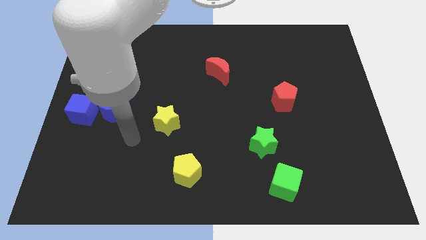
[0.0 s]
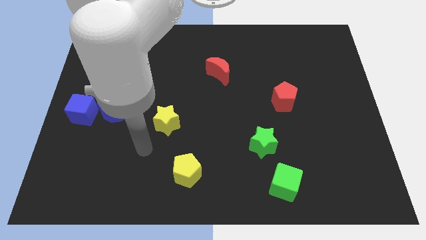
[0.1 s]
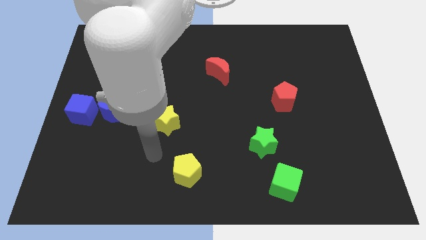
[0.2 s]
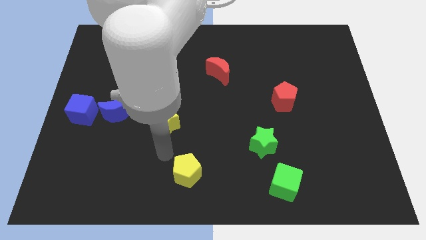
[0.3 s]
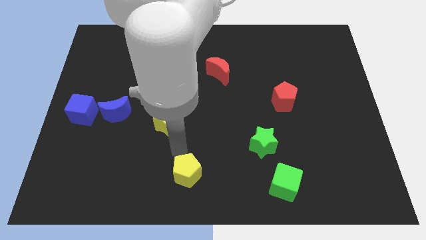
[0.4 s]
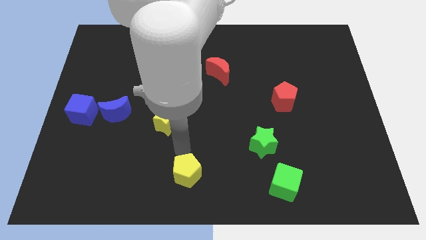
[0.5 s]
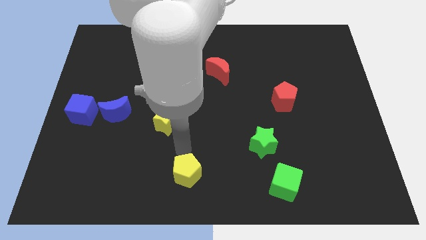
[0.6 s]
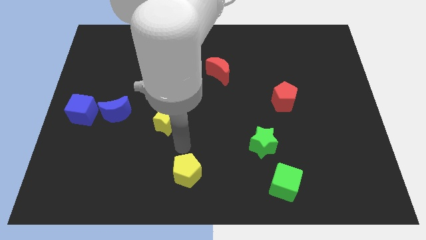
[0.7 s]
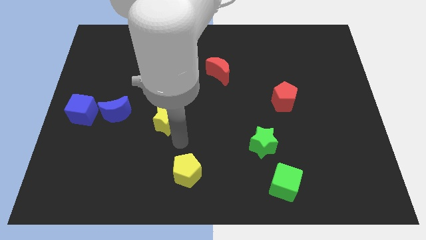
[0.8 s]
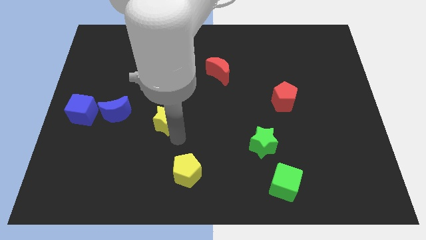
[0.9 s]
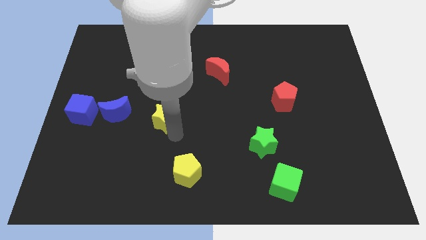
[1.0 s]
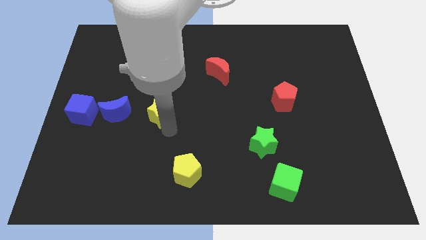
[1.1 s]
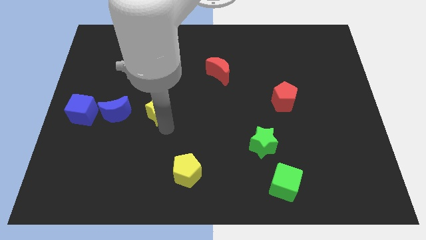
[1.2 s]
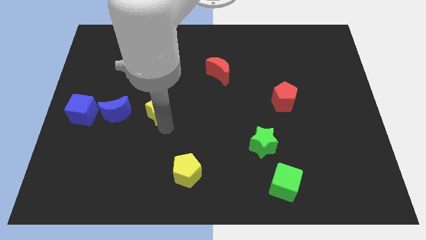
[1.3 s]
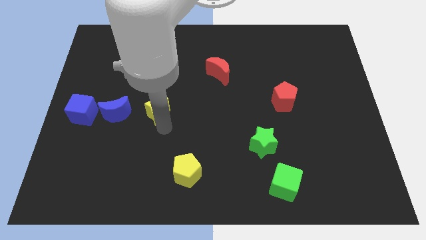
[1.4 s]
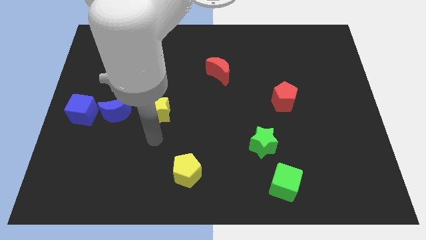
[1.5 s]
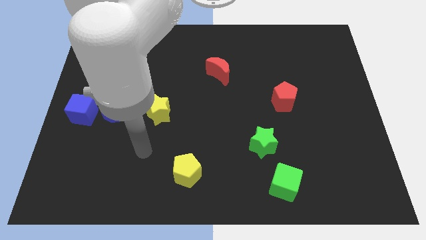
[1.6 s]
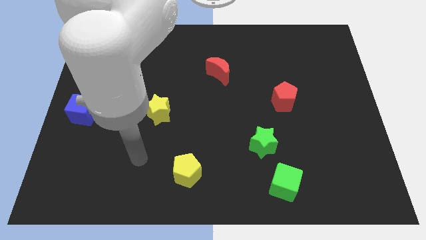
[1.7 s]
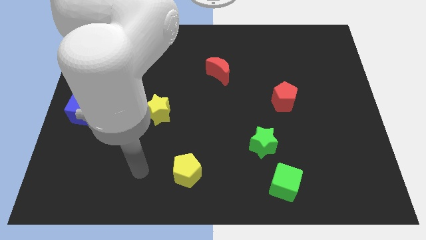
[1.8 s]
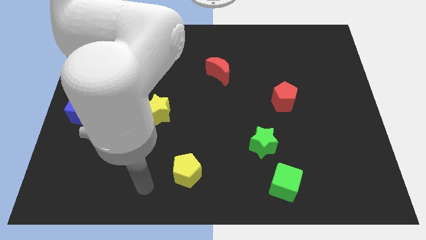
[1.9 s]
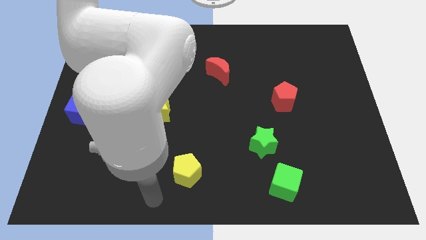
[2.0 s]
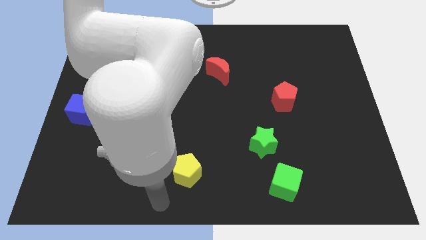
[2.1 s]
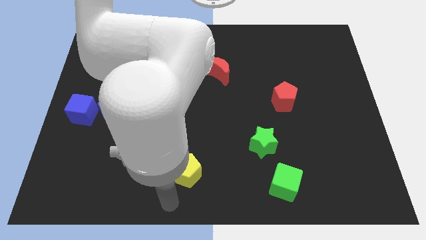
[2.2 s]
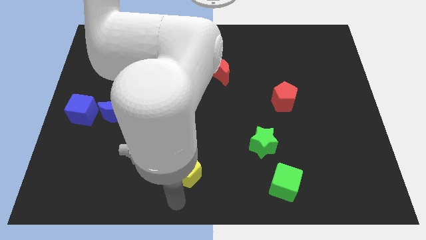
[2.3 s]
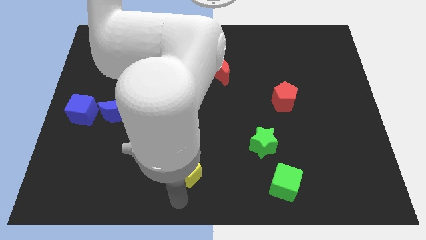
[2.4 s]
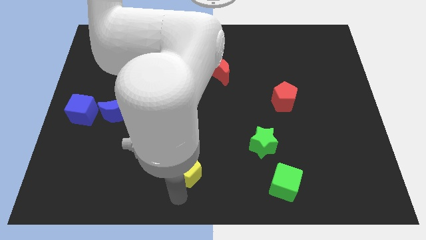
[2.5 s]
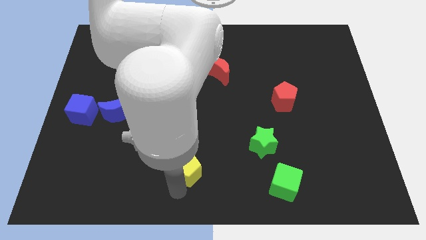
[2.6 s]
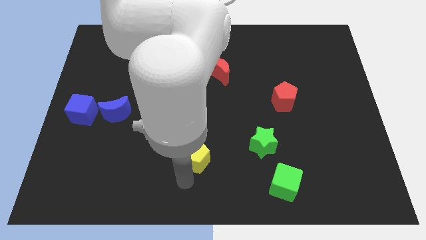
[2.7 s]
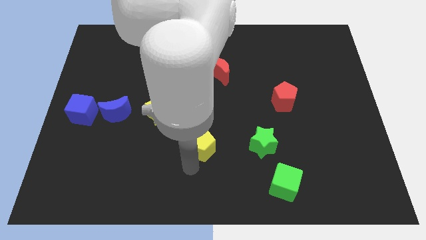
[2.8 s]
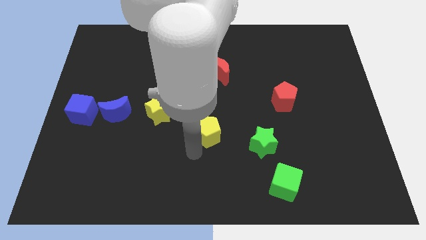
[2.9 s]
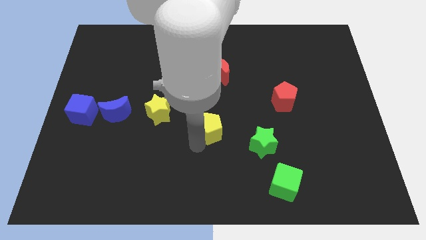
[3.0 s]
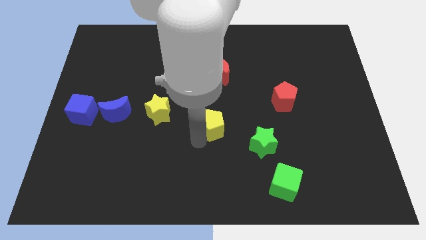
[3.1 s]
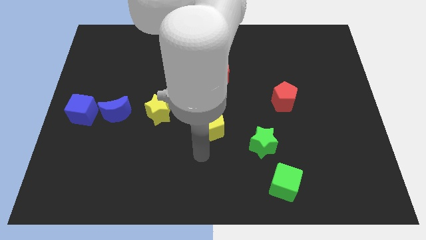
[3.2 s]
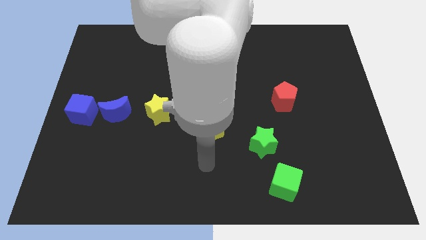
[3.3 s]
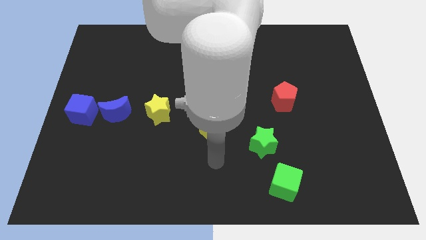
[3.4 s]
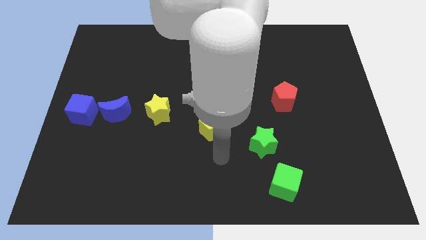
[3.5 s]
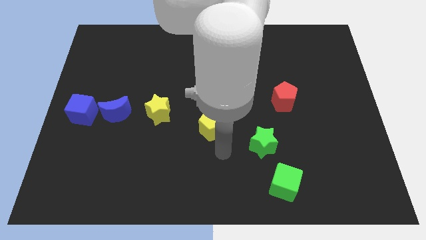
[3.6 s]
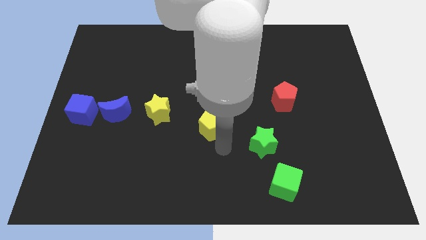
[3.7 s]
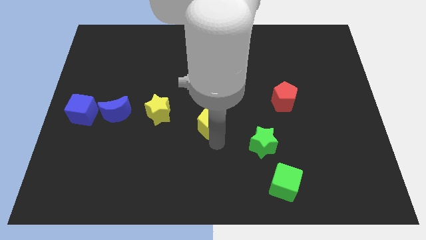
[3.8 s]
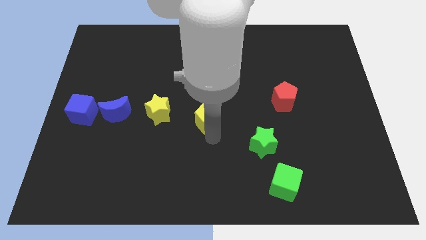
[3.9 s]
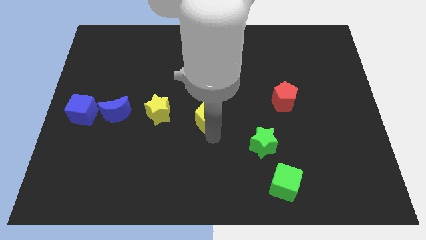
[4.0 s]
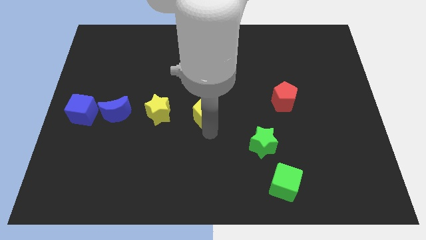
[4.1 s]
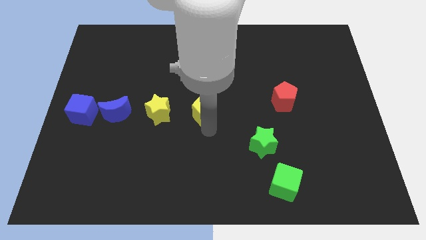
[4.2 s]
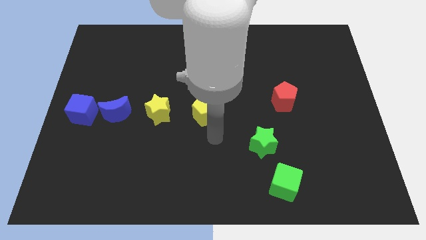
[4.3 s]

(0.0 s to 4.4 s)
place the yellow blocks horizontally to the right side of the blue crescent

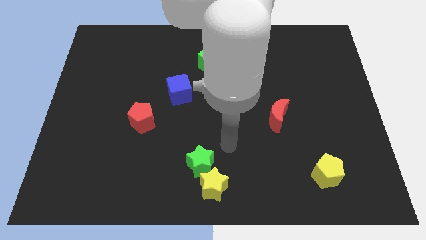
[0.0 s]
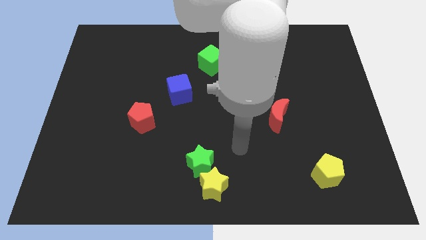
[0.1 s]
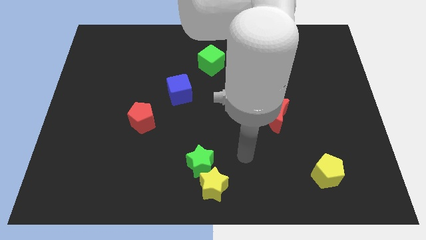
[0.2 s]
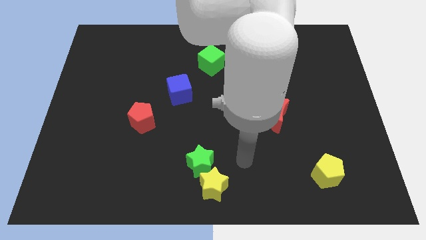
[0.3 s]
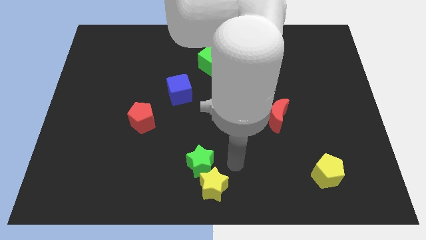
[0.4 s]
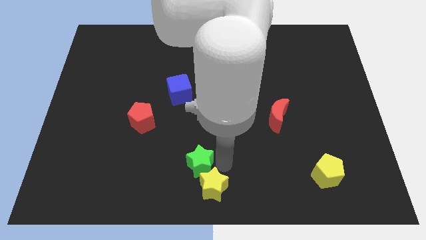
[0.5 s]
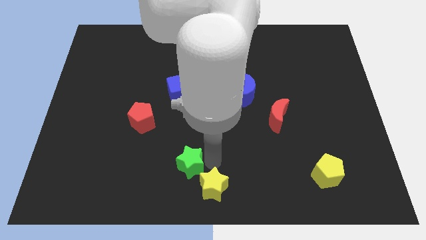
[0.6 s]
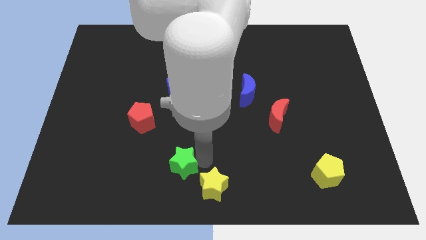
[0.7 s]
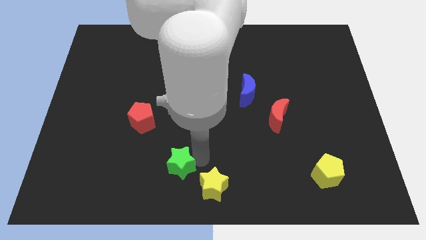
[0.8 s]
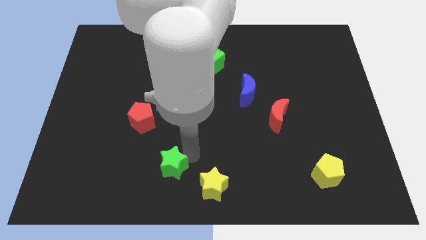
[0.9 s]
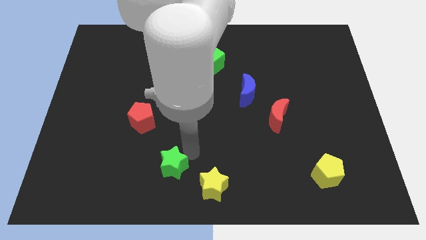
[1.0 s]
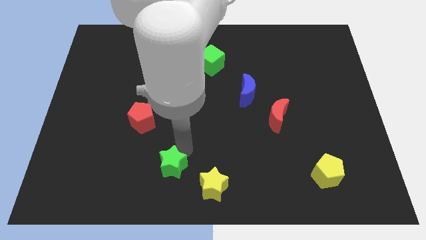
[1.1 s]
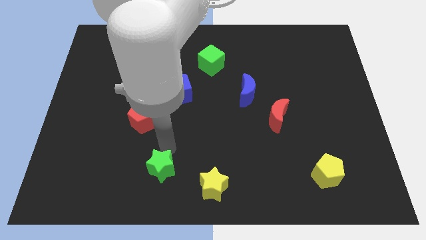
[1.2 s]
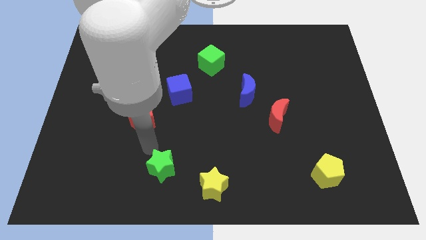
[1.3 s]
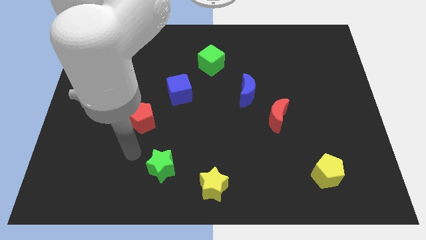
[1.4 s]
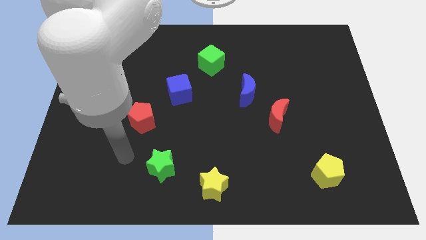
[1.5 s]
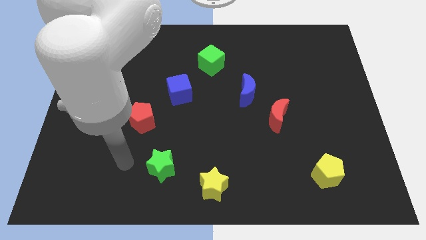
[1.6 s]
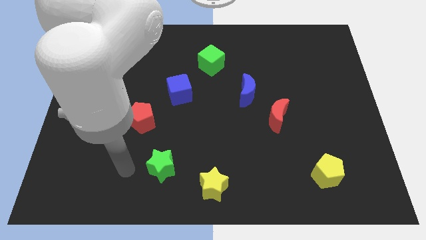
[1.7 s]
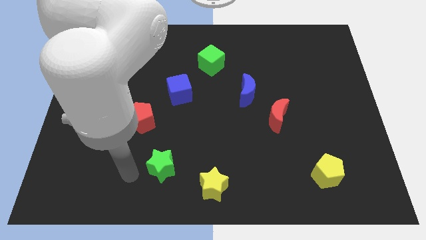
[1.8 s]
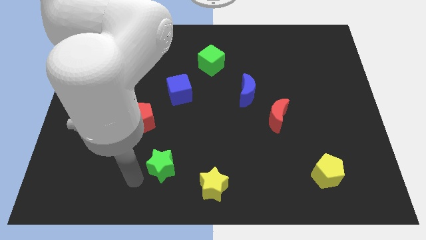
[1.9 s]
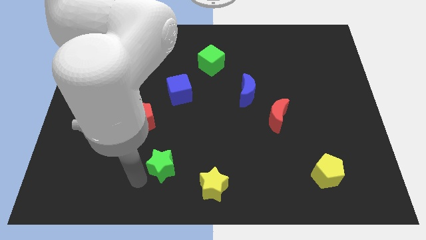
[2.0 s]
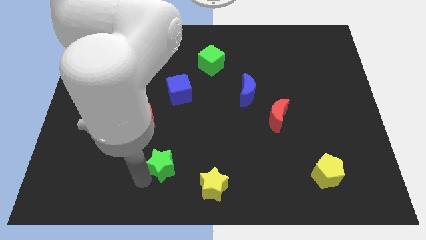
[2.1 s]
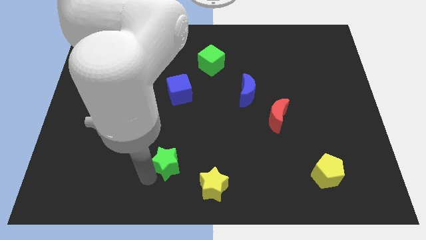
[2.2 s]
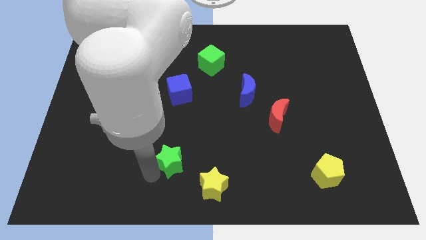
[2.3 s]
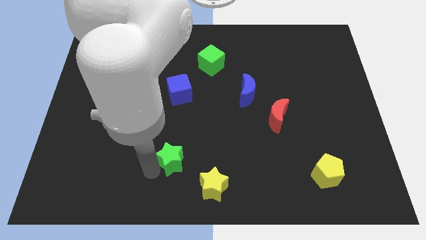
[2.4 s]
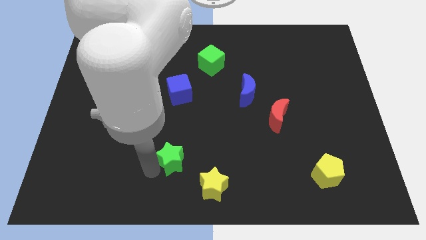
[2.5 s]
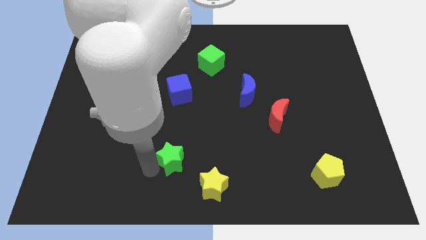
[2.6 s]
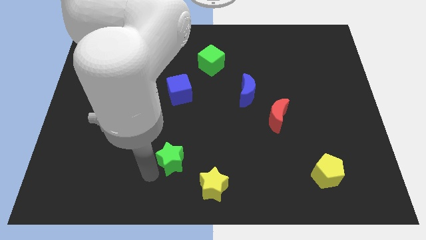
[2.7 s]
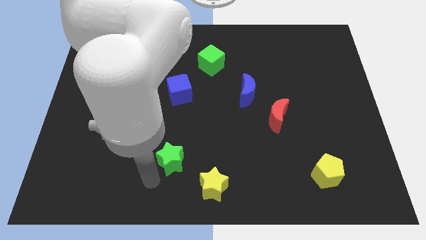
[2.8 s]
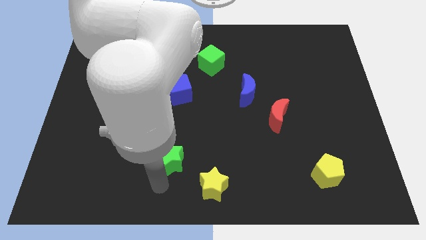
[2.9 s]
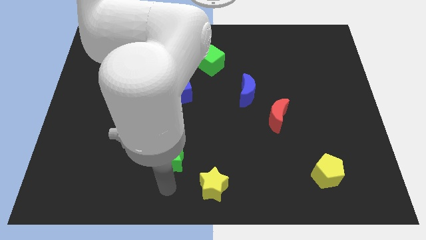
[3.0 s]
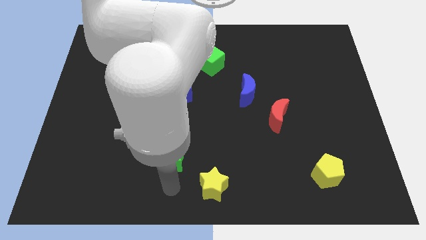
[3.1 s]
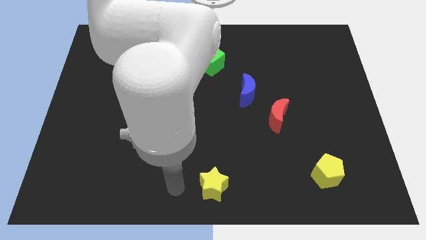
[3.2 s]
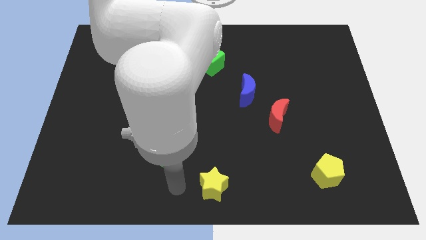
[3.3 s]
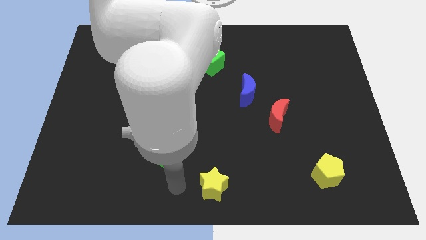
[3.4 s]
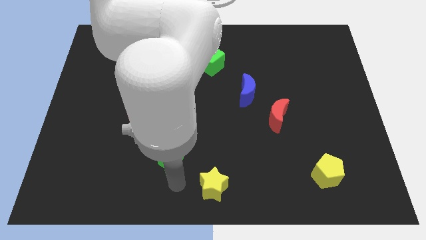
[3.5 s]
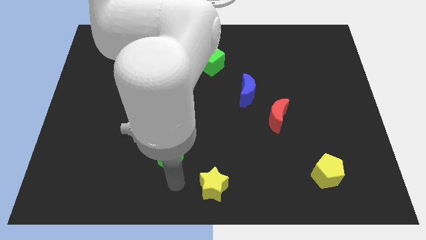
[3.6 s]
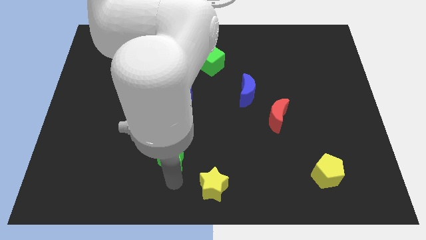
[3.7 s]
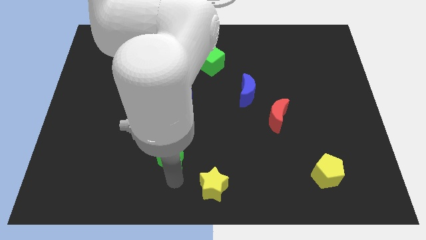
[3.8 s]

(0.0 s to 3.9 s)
place the green star diagonally in between the yellow star and the red pentagon

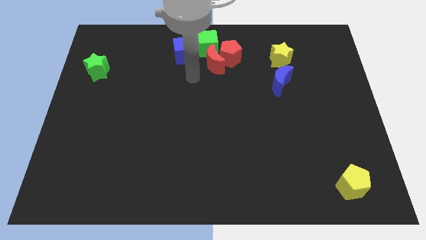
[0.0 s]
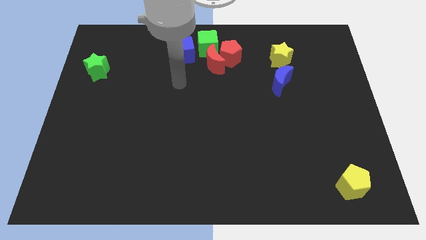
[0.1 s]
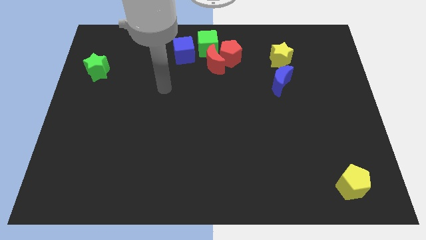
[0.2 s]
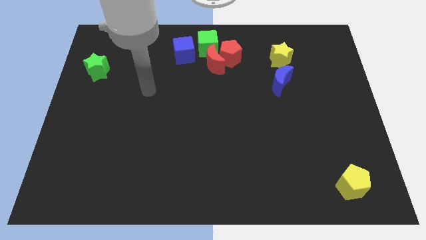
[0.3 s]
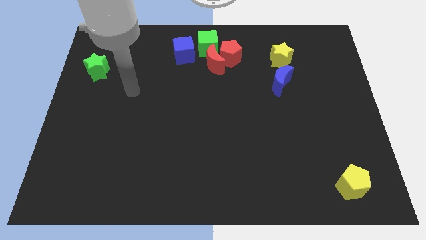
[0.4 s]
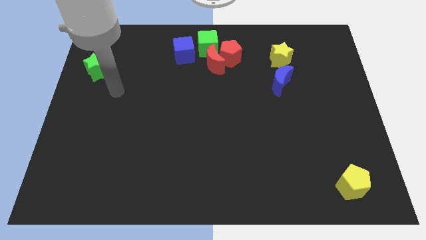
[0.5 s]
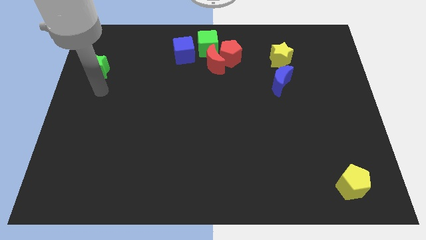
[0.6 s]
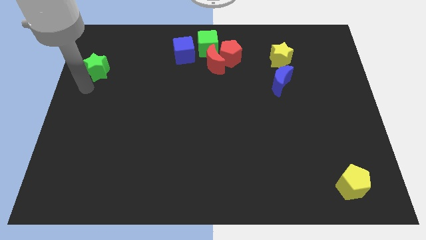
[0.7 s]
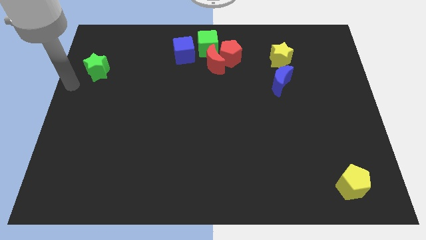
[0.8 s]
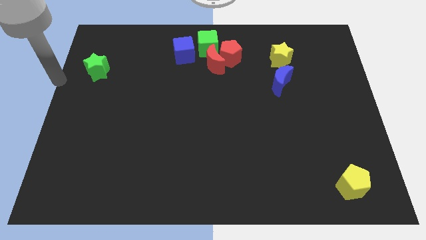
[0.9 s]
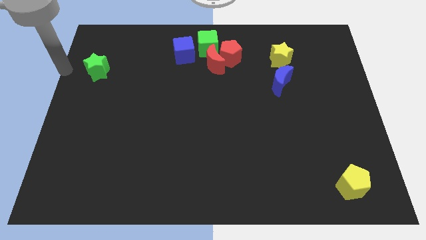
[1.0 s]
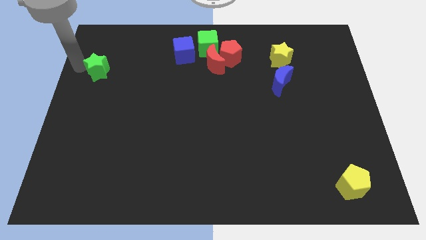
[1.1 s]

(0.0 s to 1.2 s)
move your hand to the left of the green star
